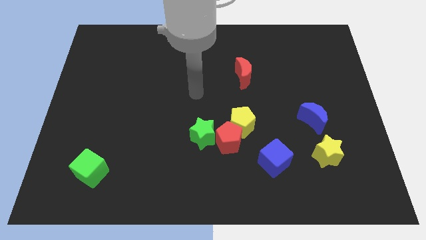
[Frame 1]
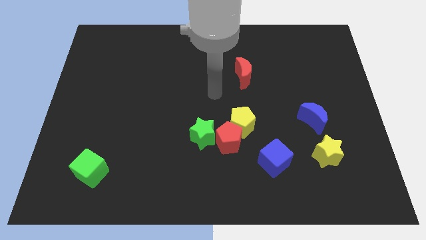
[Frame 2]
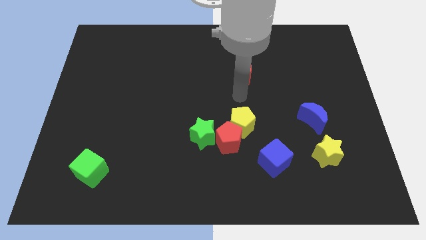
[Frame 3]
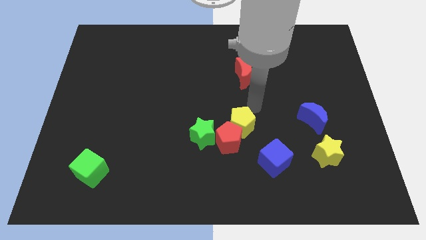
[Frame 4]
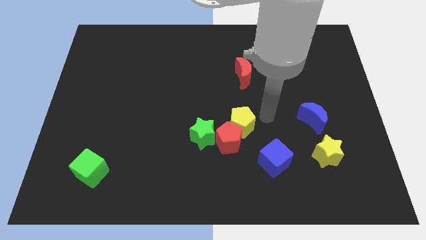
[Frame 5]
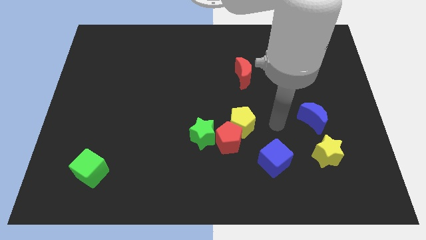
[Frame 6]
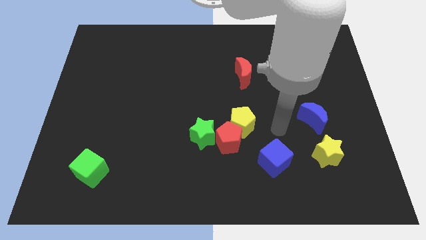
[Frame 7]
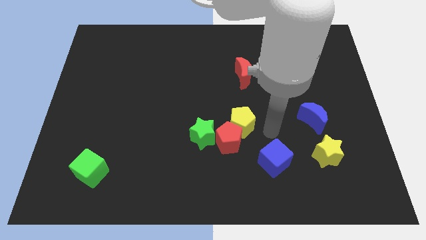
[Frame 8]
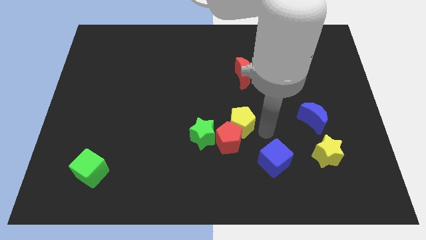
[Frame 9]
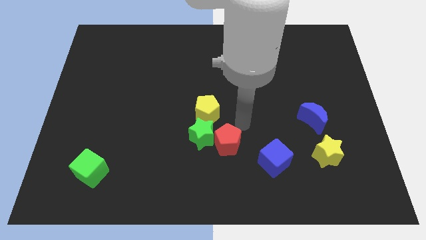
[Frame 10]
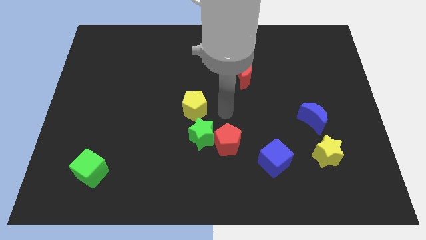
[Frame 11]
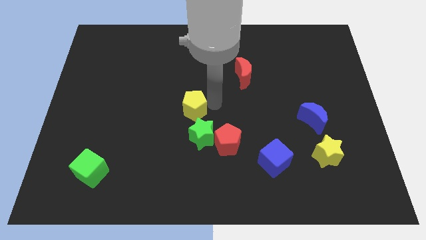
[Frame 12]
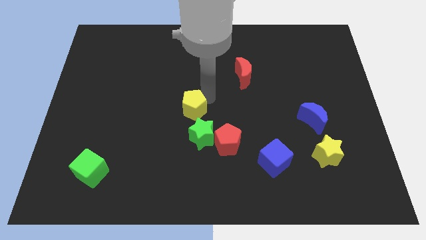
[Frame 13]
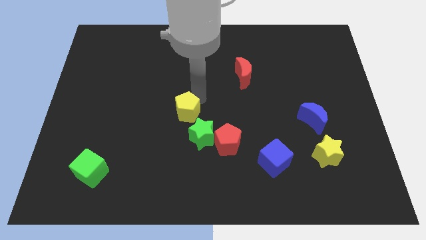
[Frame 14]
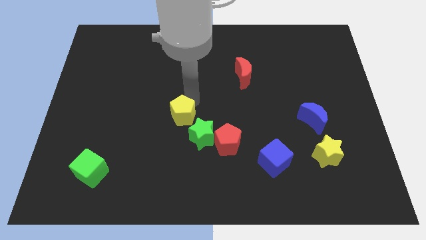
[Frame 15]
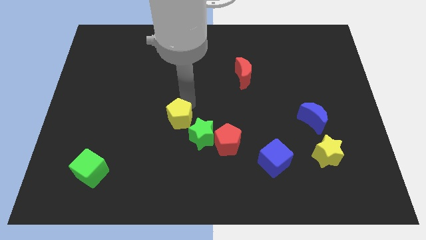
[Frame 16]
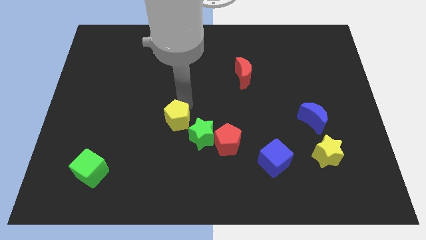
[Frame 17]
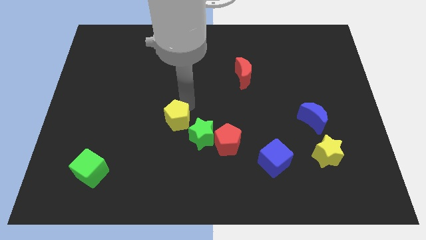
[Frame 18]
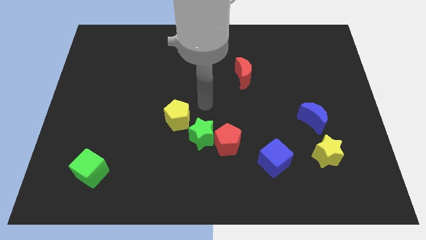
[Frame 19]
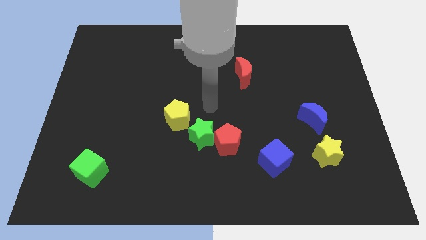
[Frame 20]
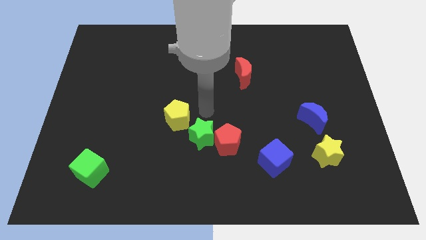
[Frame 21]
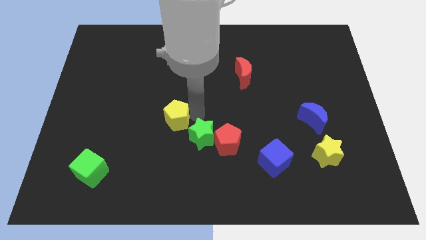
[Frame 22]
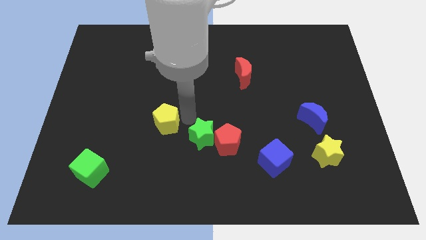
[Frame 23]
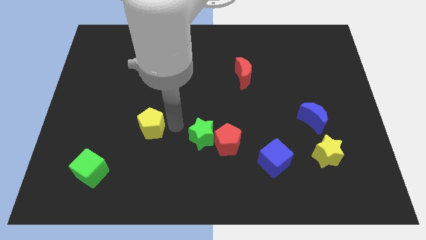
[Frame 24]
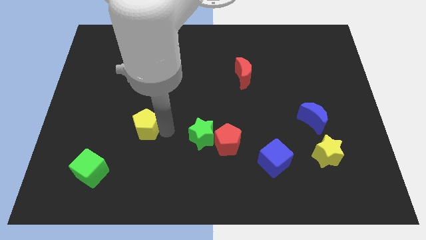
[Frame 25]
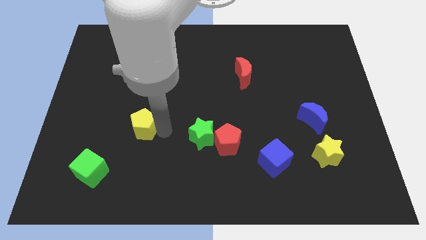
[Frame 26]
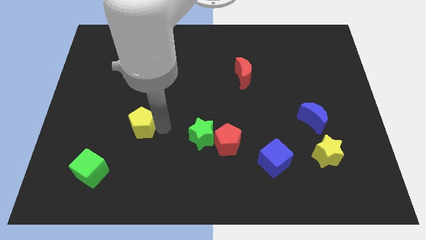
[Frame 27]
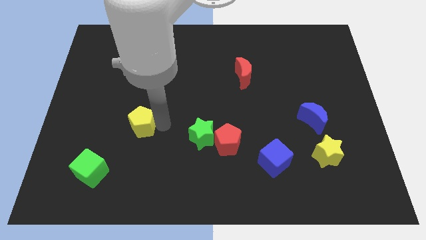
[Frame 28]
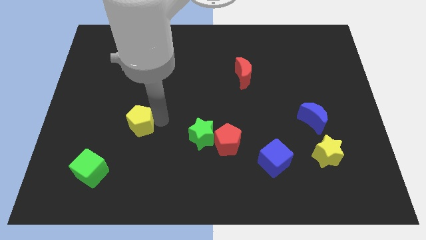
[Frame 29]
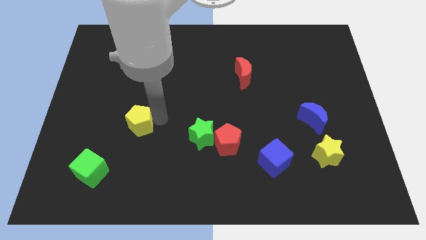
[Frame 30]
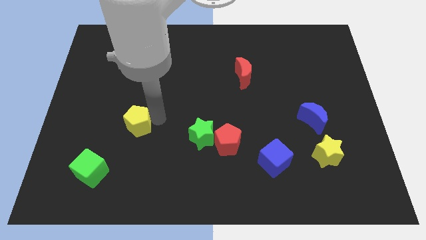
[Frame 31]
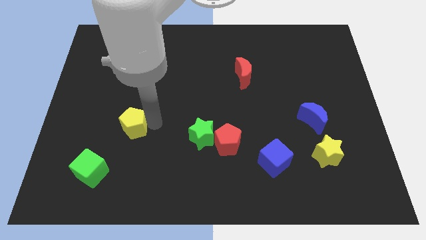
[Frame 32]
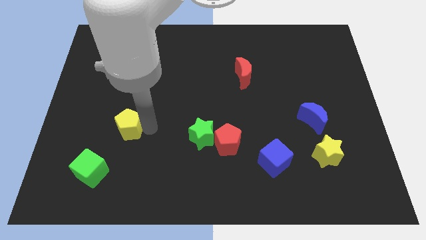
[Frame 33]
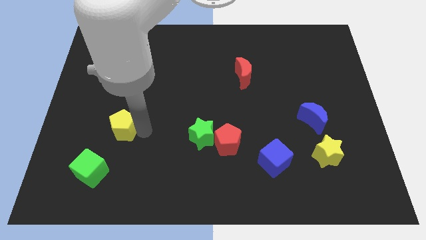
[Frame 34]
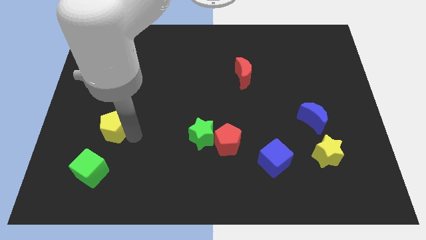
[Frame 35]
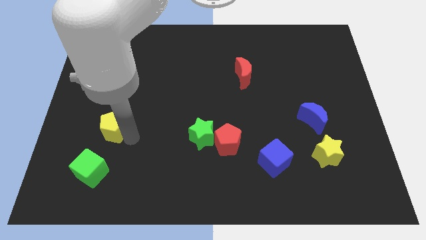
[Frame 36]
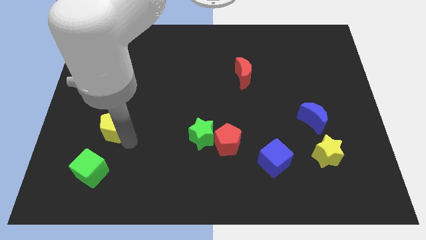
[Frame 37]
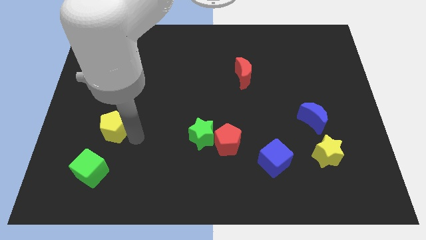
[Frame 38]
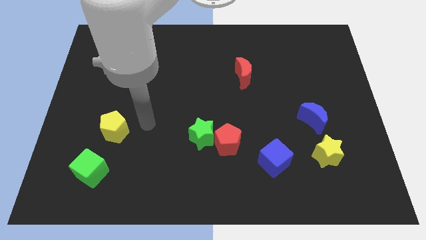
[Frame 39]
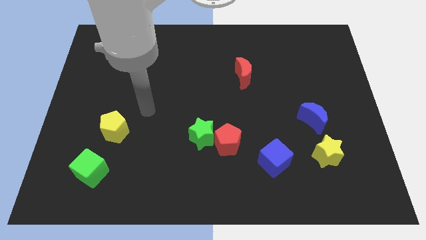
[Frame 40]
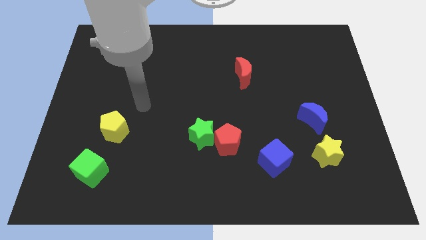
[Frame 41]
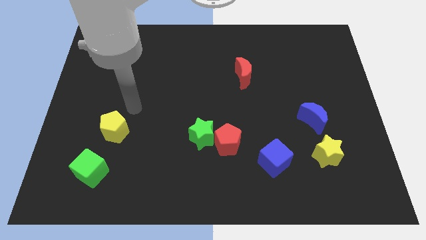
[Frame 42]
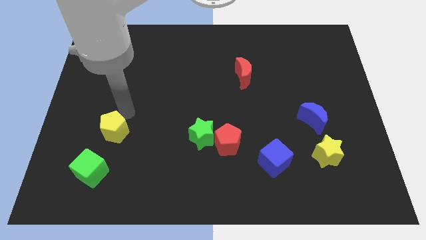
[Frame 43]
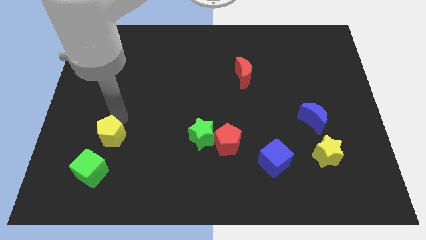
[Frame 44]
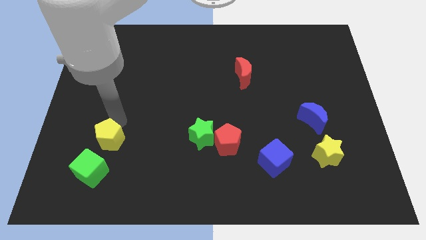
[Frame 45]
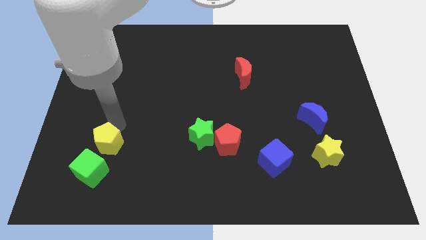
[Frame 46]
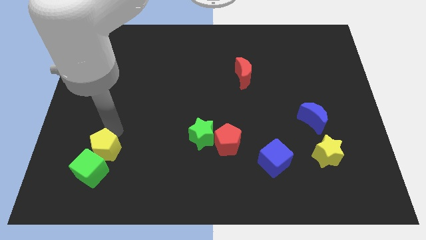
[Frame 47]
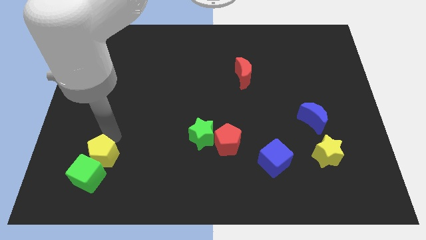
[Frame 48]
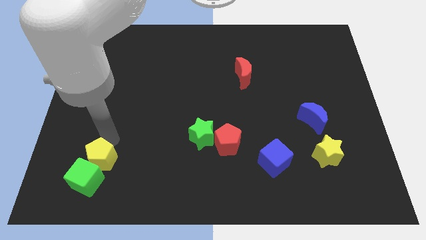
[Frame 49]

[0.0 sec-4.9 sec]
move the yellow pentagon close to the green cube

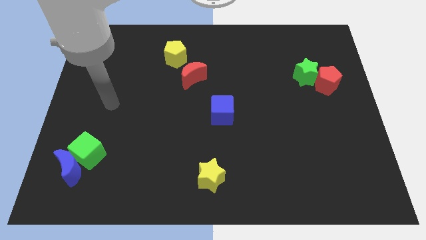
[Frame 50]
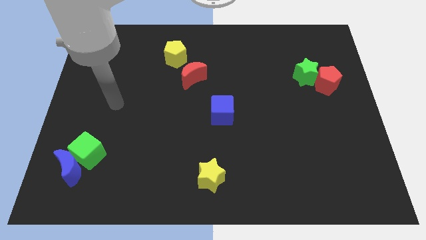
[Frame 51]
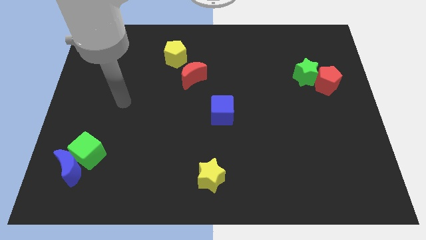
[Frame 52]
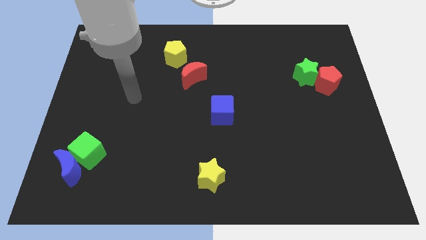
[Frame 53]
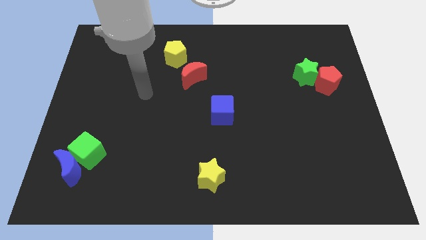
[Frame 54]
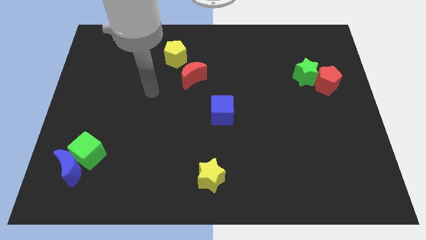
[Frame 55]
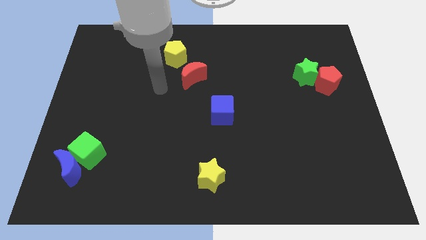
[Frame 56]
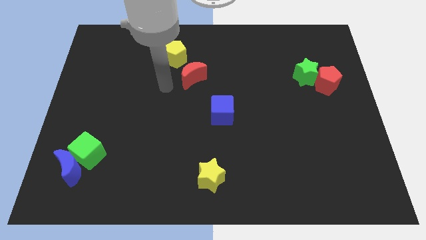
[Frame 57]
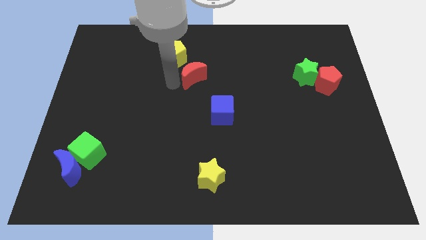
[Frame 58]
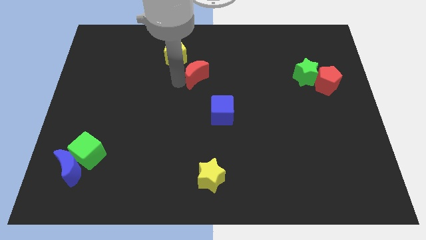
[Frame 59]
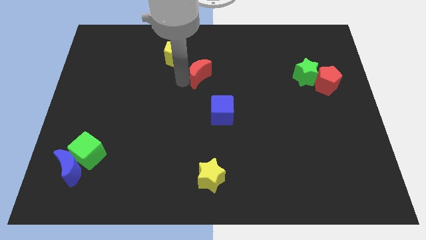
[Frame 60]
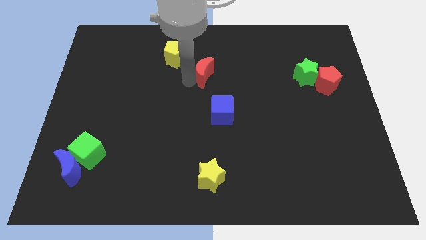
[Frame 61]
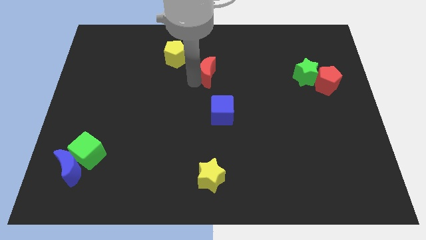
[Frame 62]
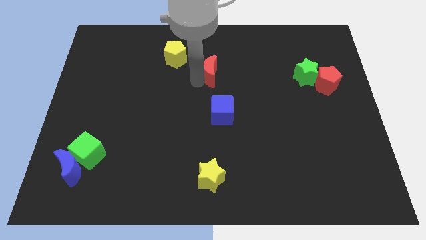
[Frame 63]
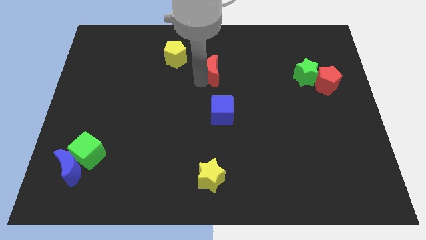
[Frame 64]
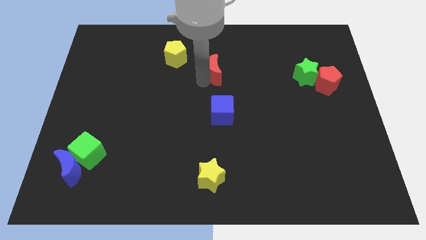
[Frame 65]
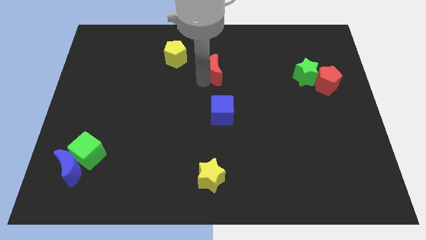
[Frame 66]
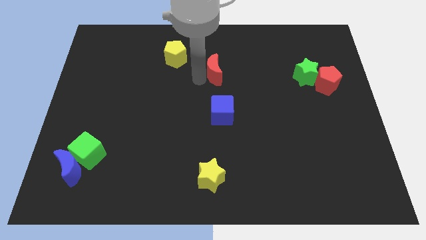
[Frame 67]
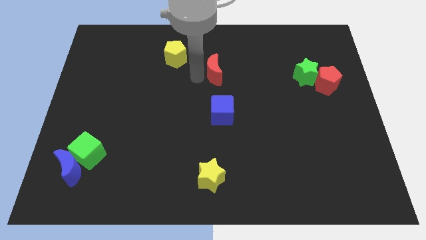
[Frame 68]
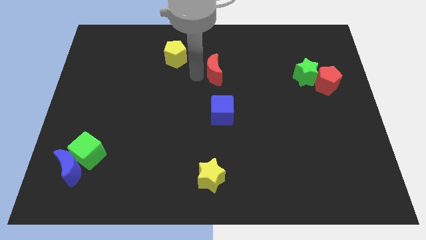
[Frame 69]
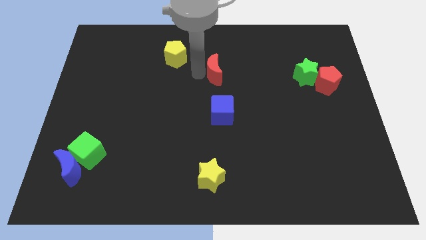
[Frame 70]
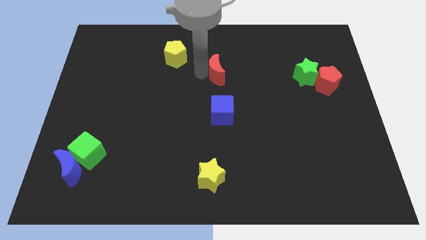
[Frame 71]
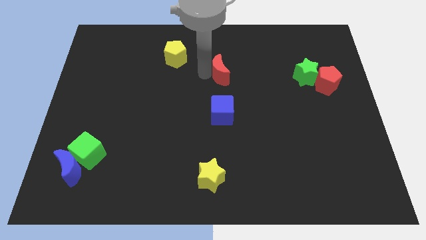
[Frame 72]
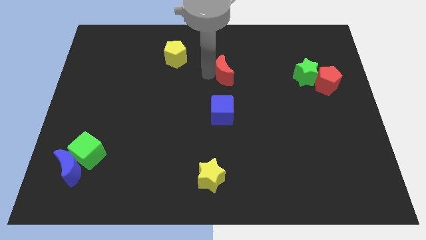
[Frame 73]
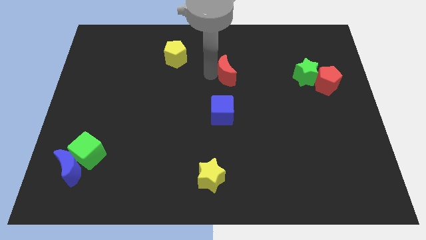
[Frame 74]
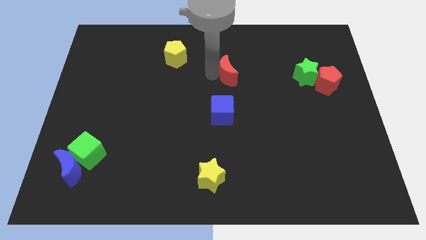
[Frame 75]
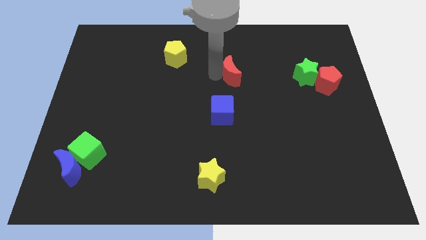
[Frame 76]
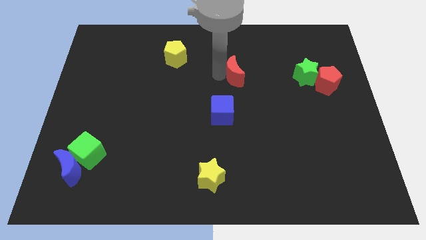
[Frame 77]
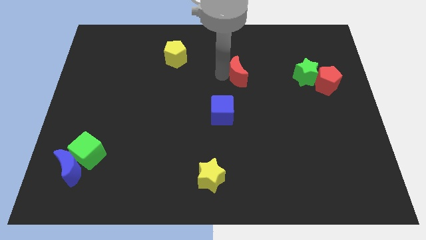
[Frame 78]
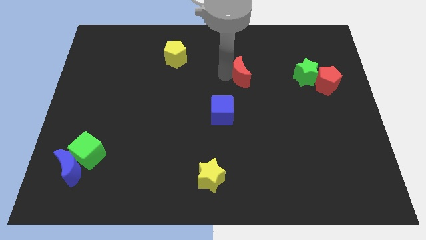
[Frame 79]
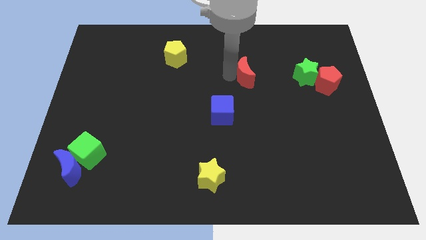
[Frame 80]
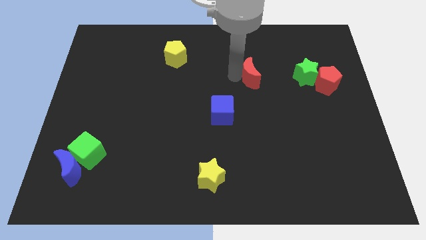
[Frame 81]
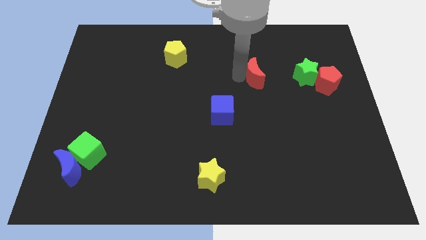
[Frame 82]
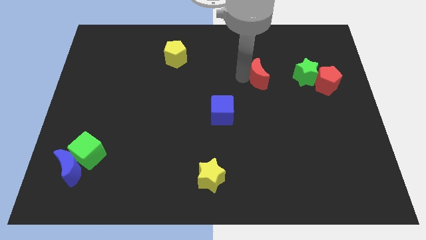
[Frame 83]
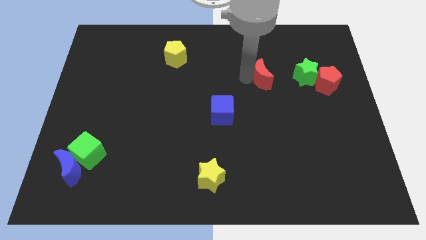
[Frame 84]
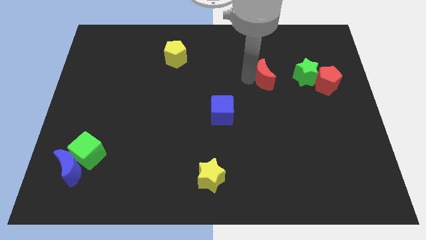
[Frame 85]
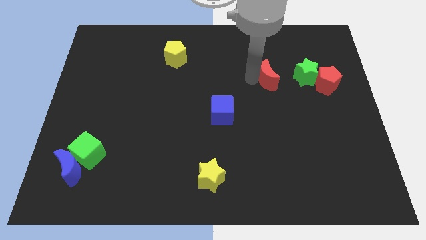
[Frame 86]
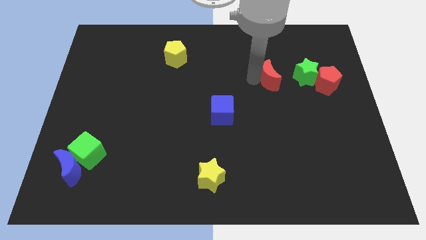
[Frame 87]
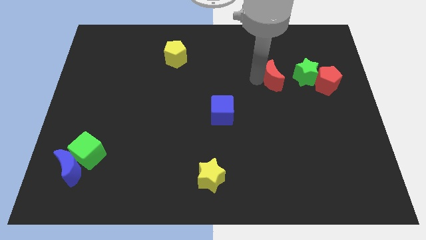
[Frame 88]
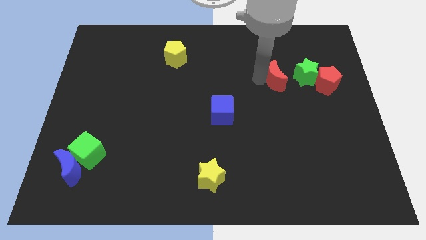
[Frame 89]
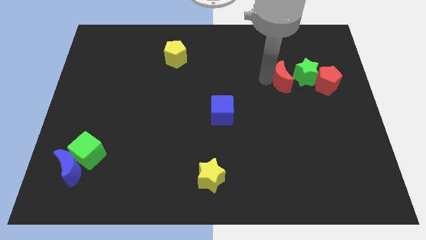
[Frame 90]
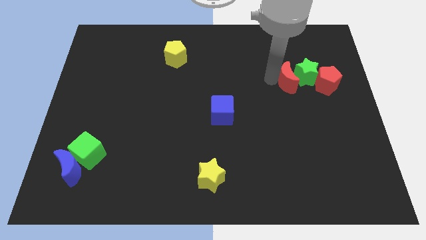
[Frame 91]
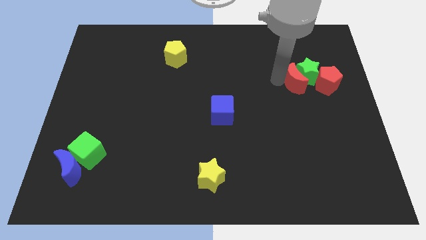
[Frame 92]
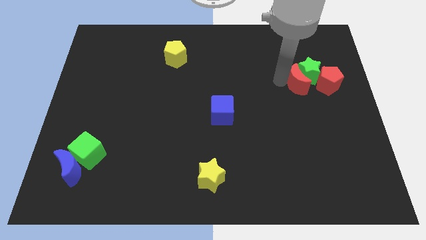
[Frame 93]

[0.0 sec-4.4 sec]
slide the red moon to the green star
